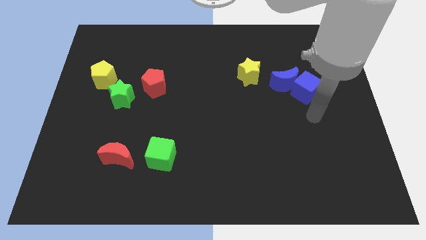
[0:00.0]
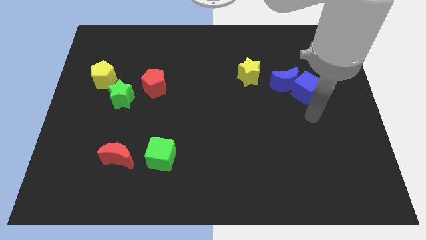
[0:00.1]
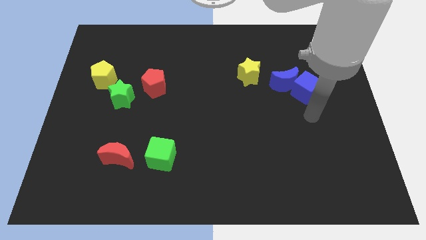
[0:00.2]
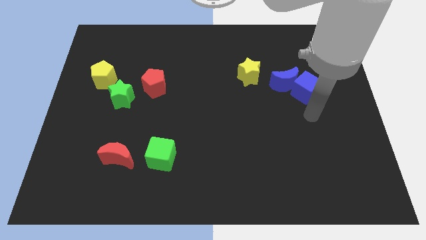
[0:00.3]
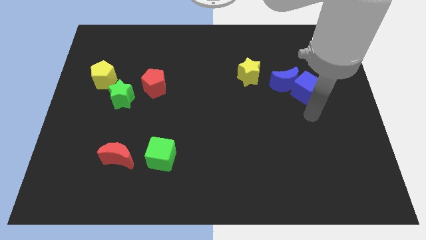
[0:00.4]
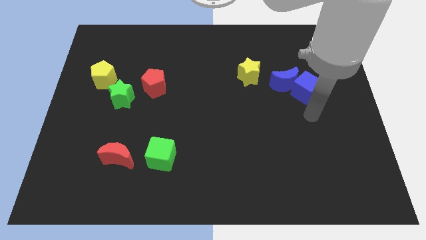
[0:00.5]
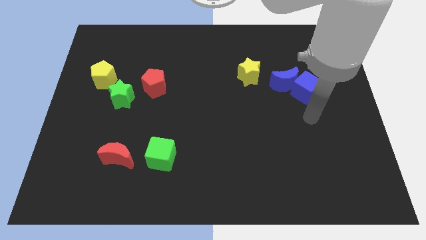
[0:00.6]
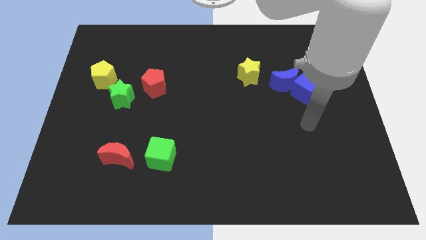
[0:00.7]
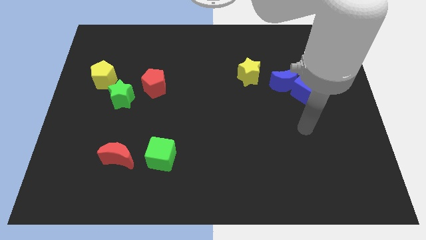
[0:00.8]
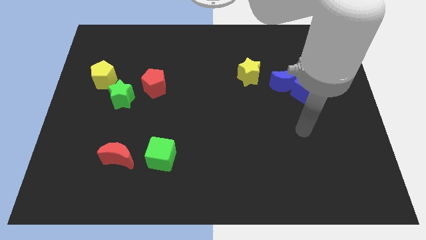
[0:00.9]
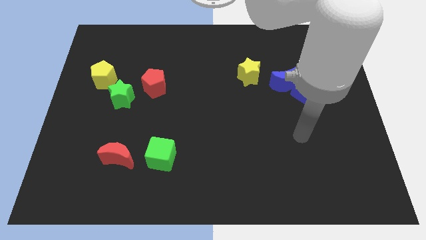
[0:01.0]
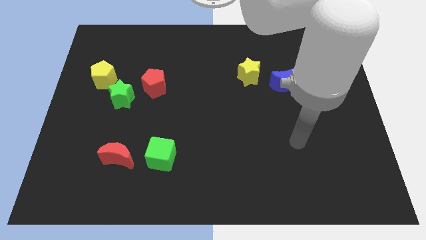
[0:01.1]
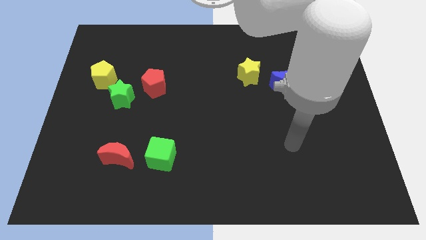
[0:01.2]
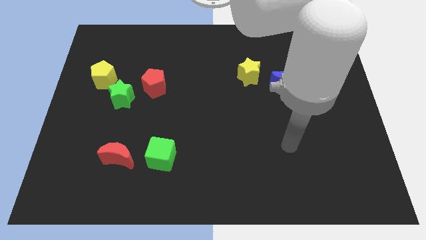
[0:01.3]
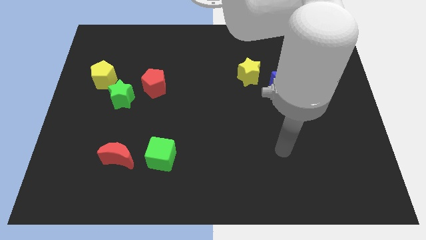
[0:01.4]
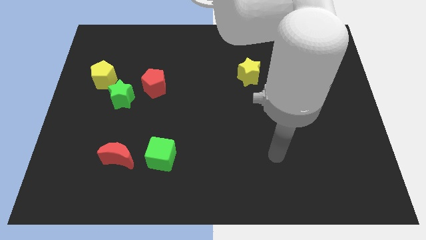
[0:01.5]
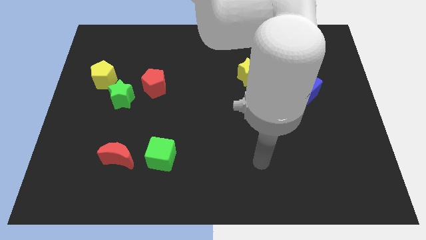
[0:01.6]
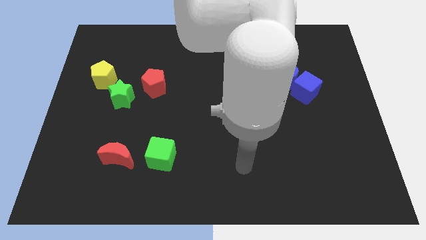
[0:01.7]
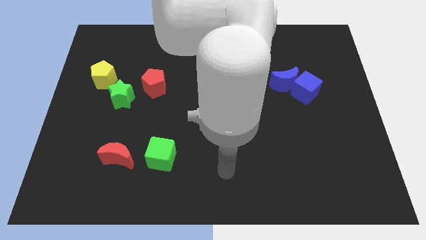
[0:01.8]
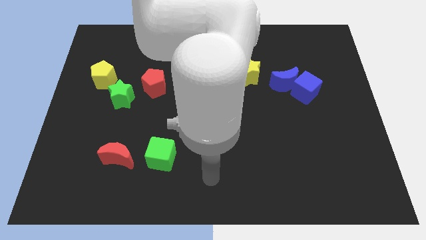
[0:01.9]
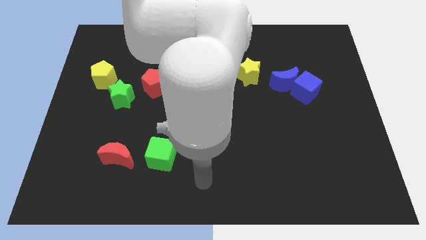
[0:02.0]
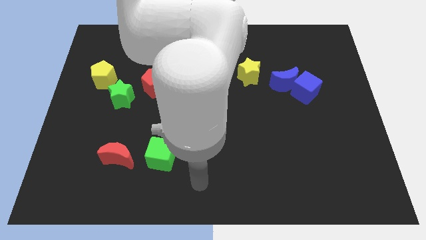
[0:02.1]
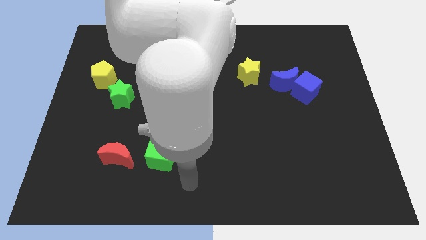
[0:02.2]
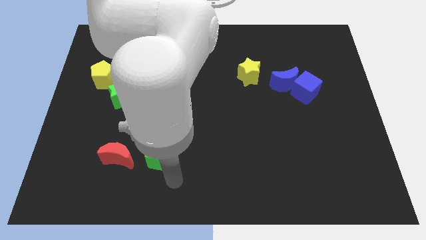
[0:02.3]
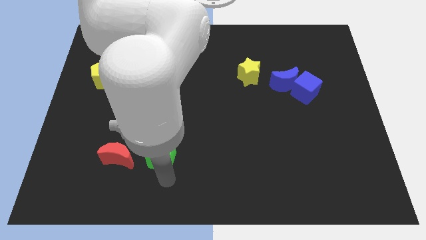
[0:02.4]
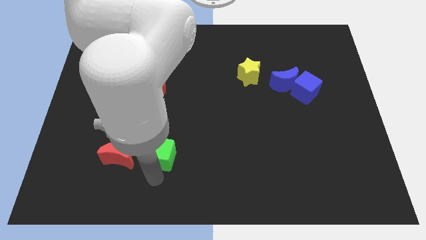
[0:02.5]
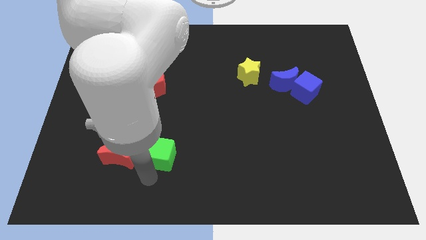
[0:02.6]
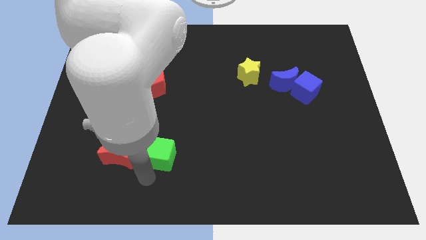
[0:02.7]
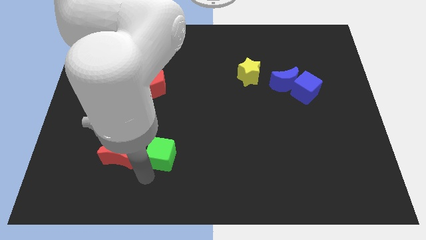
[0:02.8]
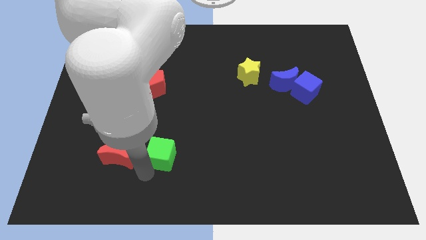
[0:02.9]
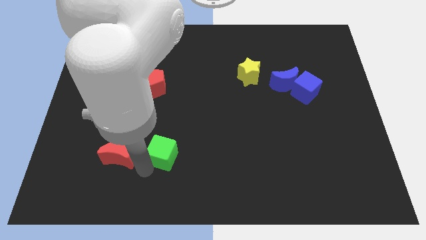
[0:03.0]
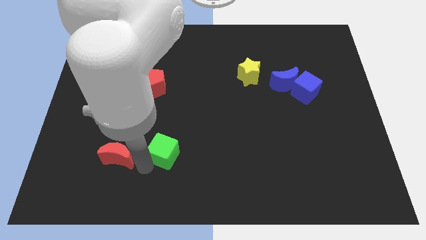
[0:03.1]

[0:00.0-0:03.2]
touch the bottom of green cube

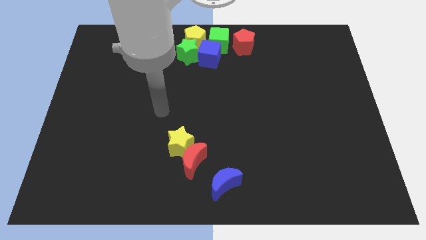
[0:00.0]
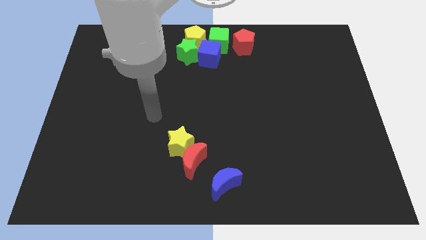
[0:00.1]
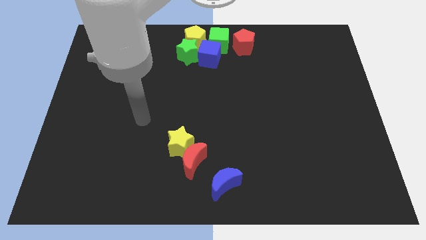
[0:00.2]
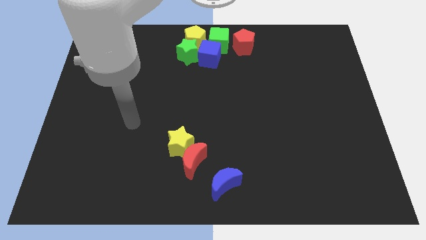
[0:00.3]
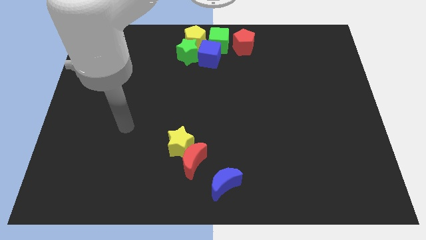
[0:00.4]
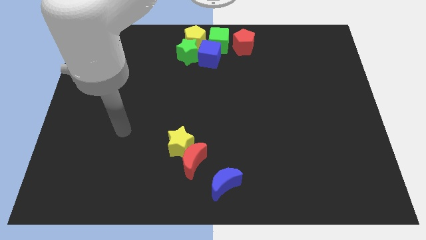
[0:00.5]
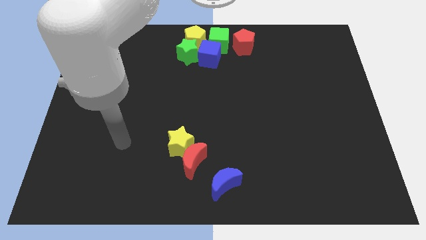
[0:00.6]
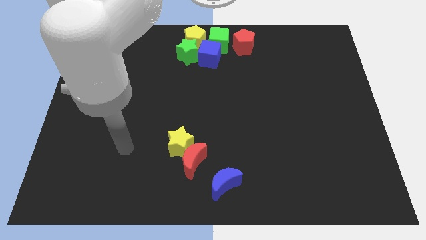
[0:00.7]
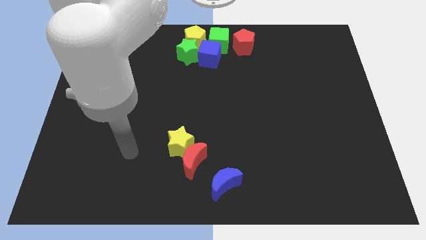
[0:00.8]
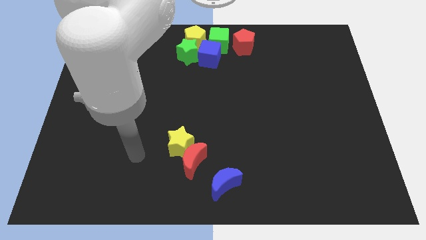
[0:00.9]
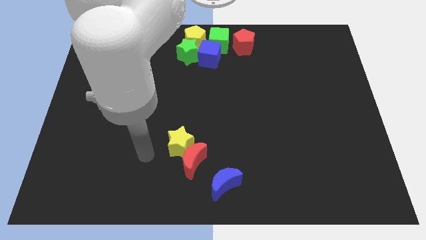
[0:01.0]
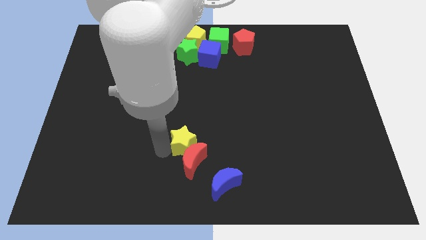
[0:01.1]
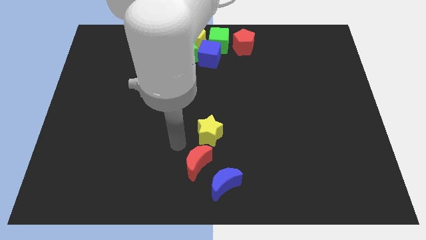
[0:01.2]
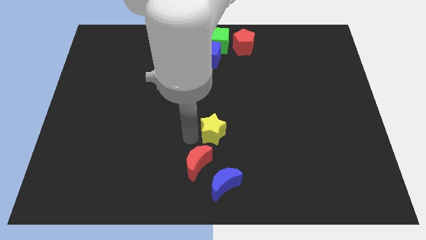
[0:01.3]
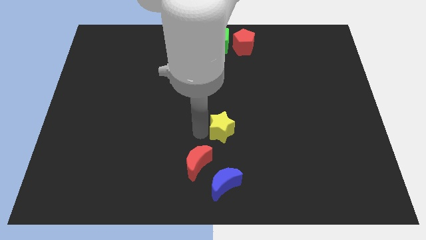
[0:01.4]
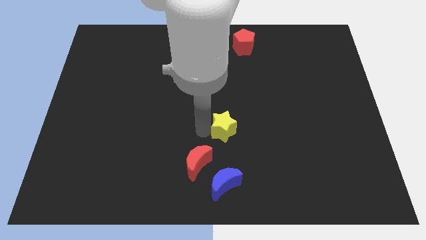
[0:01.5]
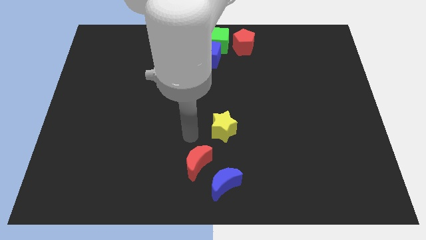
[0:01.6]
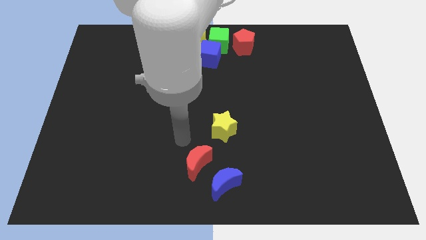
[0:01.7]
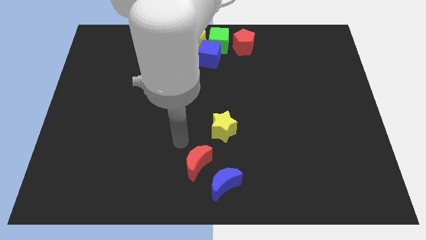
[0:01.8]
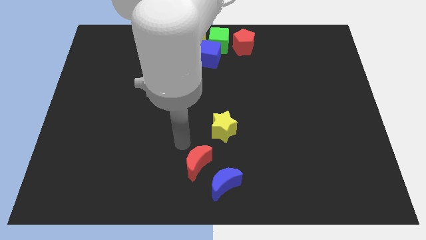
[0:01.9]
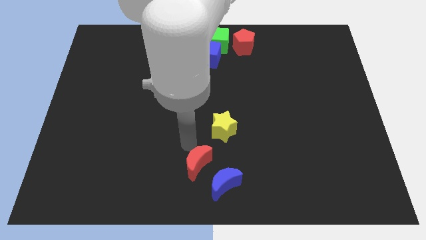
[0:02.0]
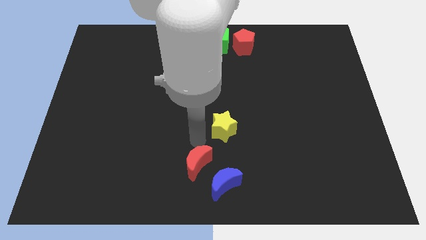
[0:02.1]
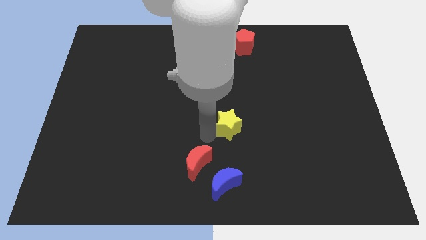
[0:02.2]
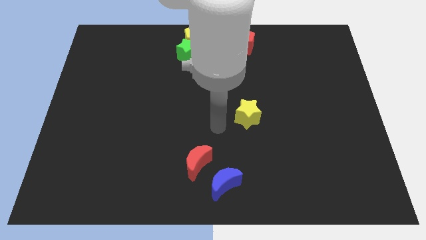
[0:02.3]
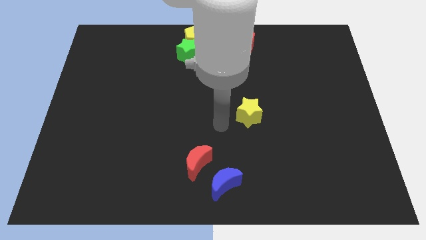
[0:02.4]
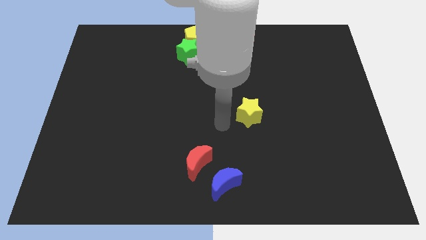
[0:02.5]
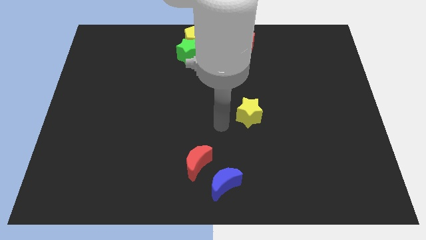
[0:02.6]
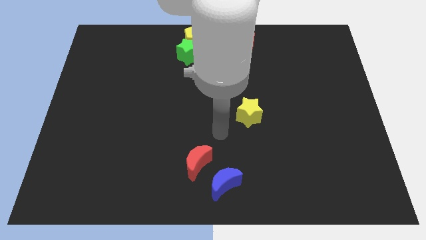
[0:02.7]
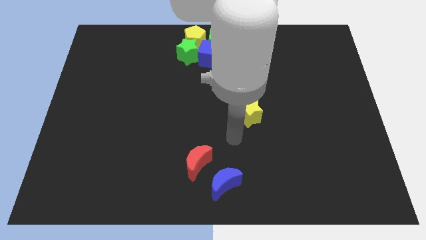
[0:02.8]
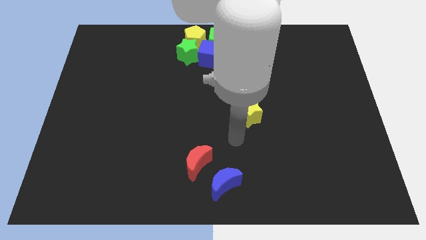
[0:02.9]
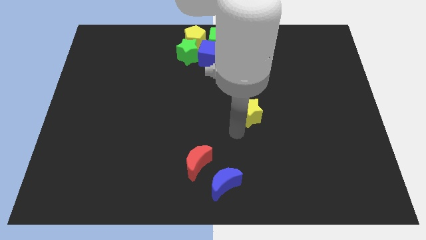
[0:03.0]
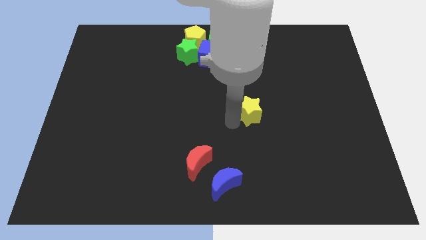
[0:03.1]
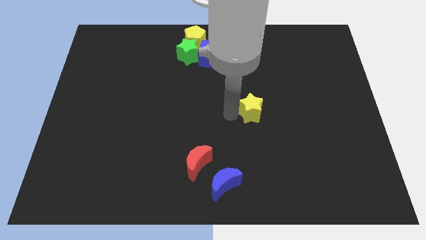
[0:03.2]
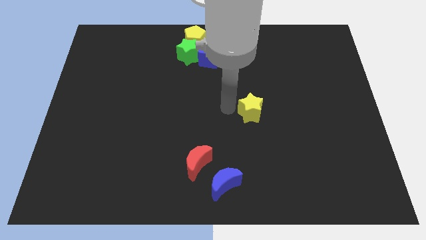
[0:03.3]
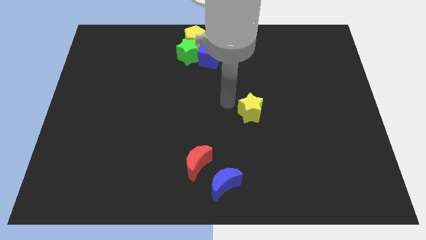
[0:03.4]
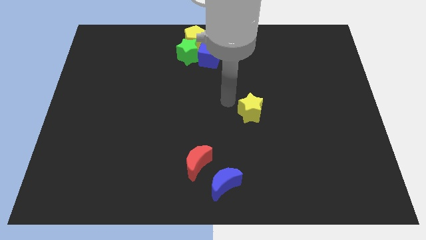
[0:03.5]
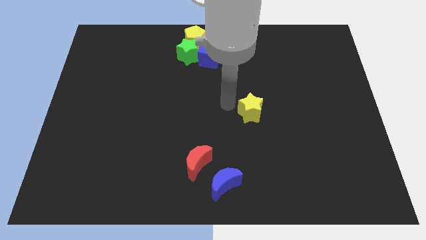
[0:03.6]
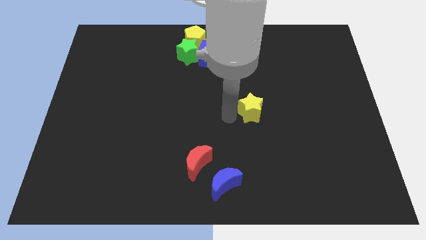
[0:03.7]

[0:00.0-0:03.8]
push the yellow star towards the center of the board

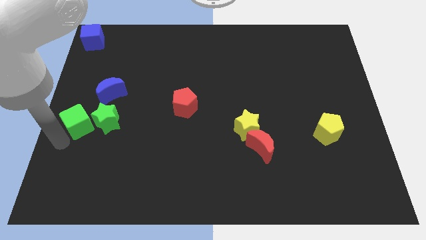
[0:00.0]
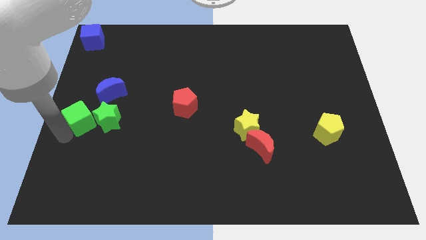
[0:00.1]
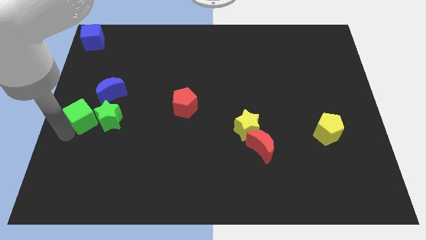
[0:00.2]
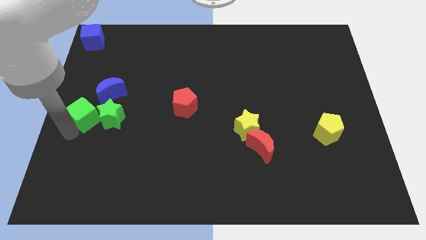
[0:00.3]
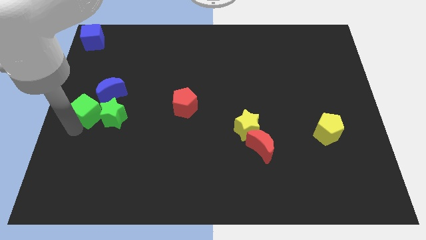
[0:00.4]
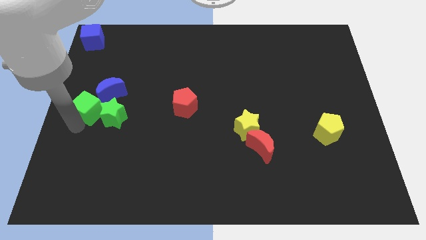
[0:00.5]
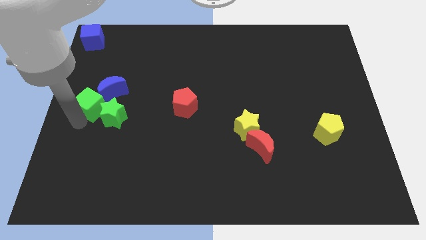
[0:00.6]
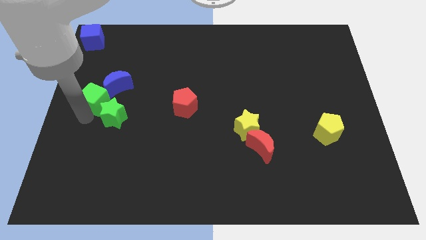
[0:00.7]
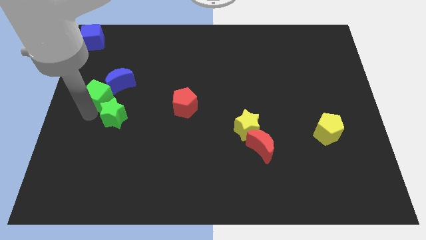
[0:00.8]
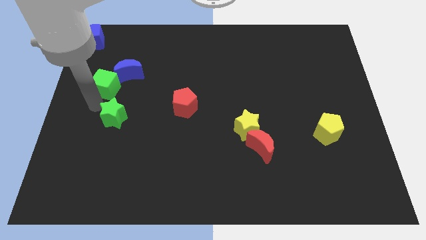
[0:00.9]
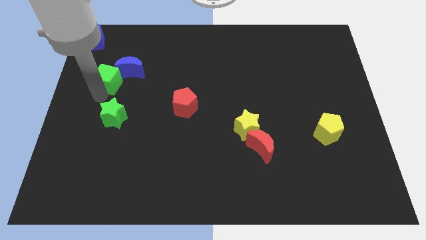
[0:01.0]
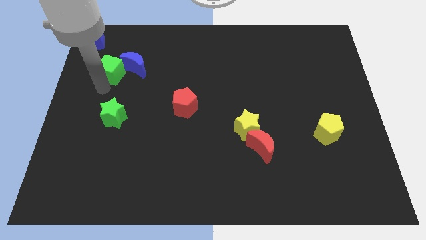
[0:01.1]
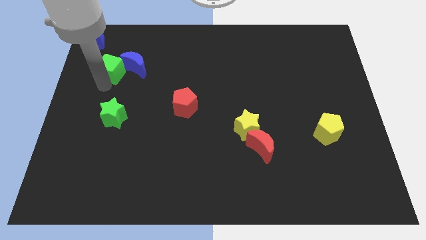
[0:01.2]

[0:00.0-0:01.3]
push the green cube to the left of the blue crescent

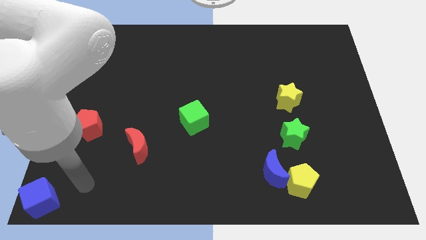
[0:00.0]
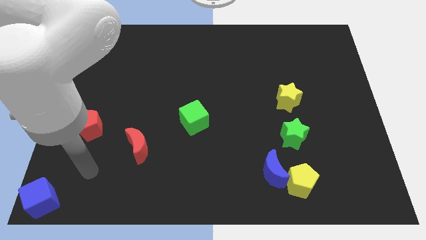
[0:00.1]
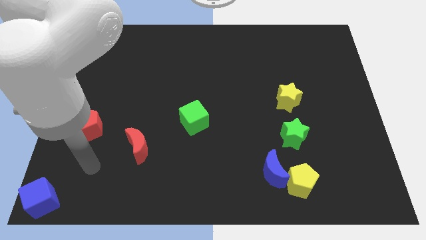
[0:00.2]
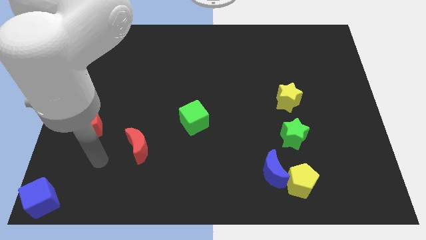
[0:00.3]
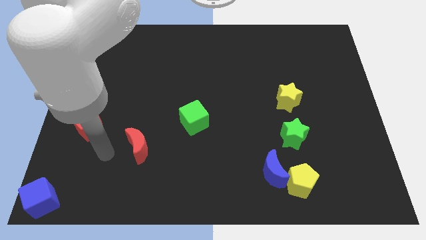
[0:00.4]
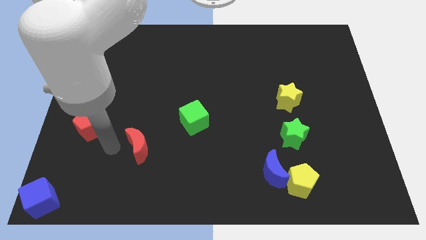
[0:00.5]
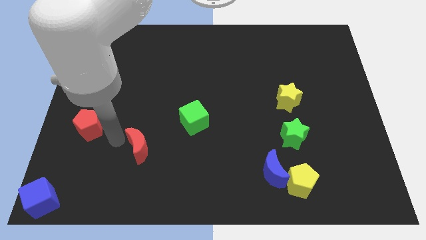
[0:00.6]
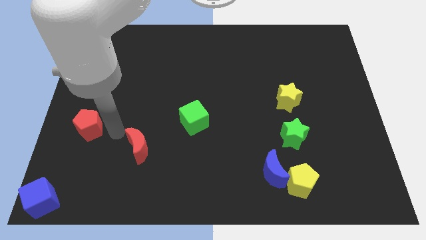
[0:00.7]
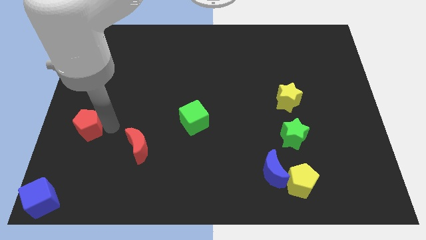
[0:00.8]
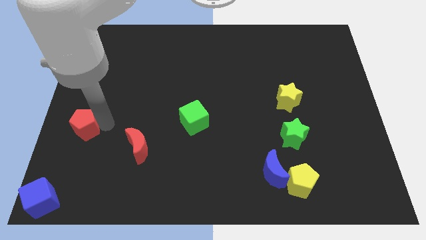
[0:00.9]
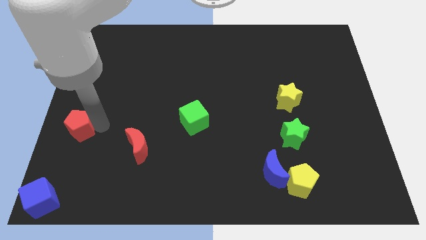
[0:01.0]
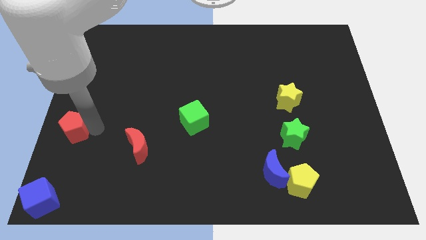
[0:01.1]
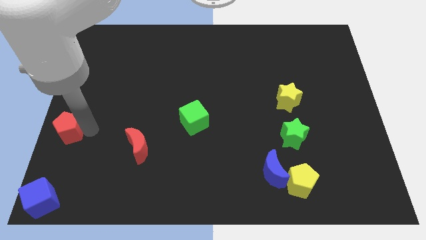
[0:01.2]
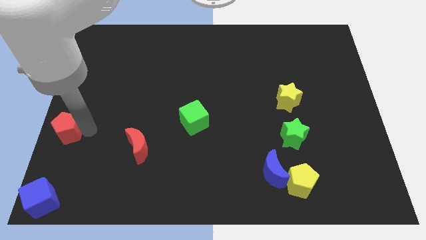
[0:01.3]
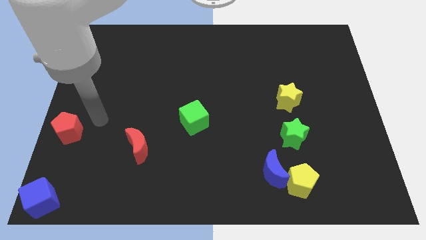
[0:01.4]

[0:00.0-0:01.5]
push the red pentagon to the left center
